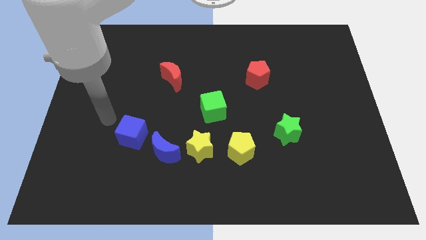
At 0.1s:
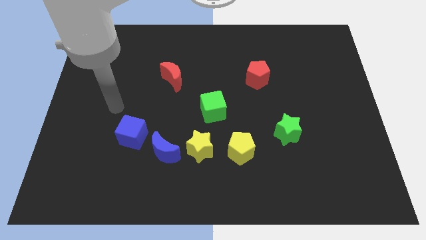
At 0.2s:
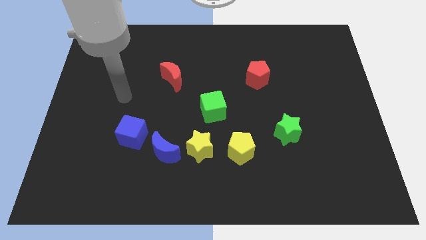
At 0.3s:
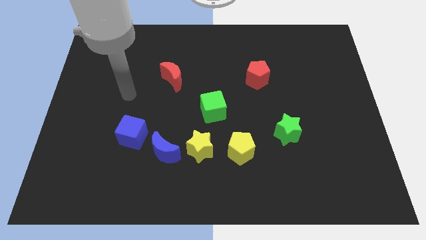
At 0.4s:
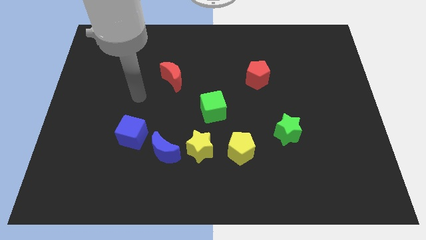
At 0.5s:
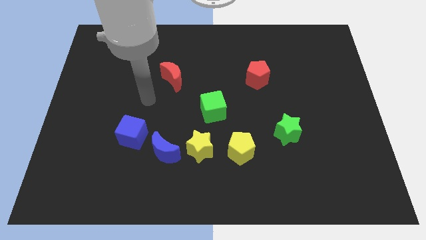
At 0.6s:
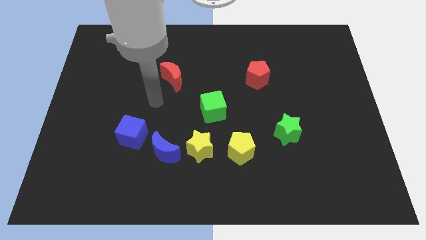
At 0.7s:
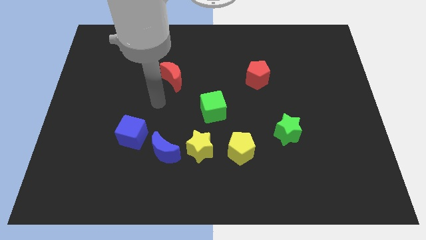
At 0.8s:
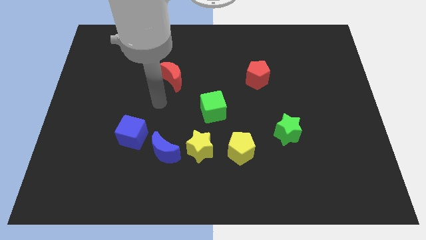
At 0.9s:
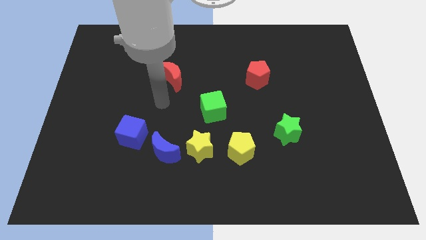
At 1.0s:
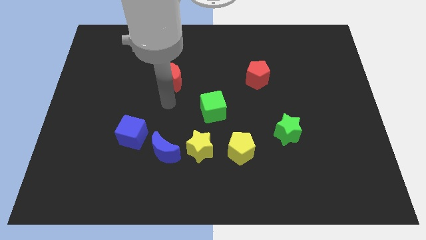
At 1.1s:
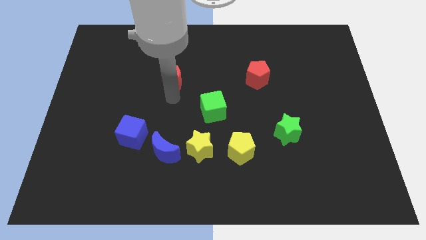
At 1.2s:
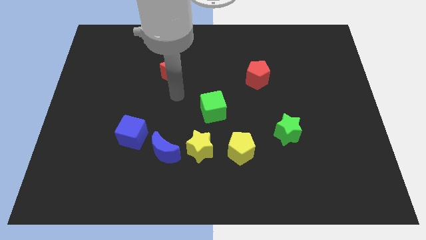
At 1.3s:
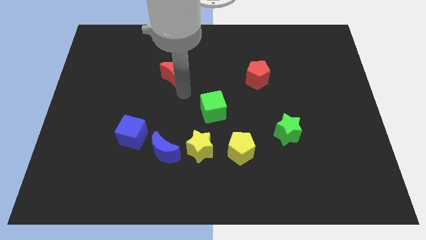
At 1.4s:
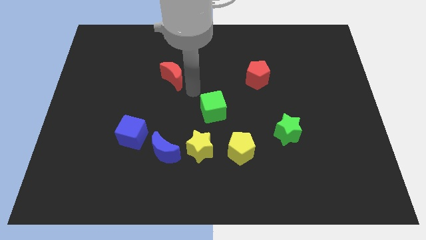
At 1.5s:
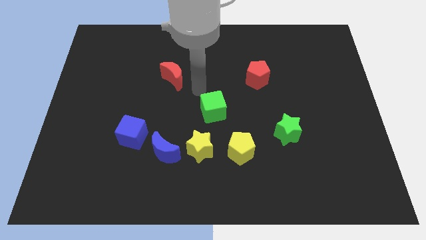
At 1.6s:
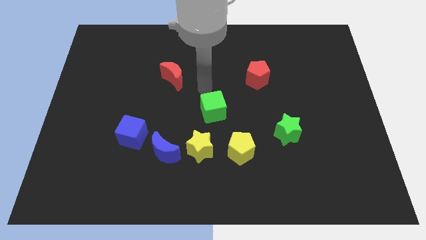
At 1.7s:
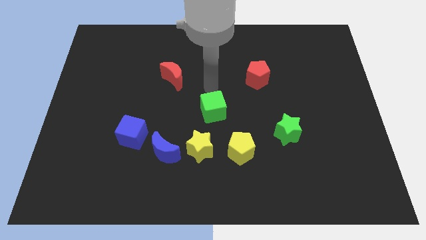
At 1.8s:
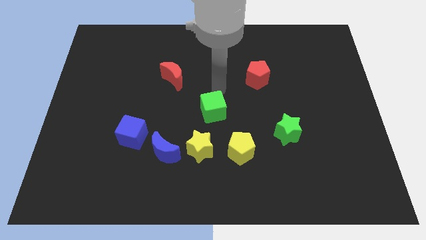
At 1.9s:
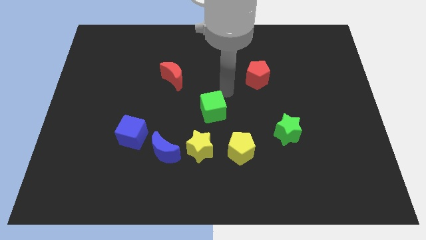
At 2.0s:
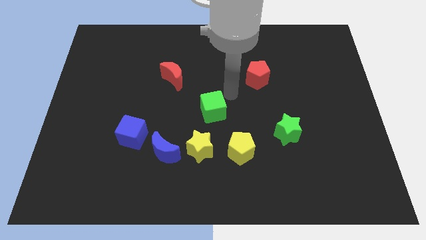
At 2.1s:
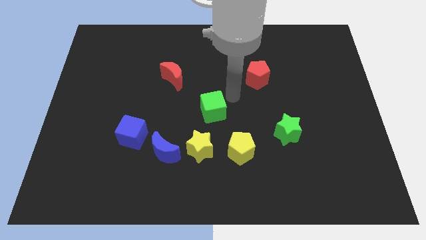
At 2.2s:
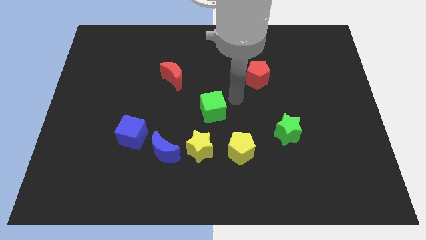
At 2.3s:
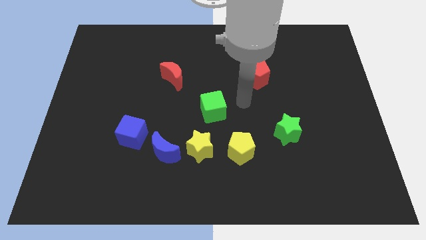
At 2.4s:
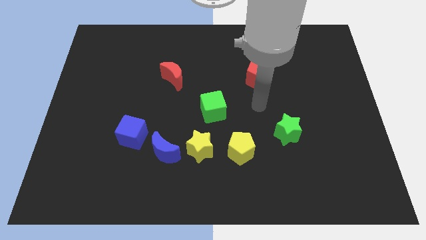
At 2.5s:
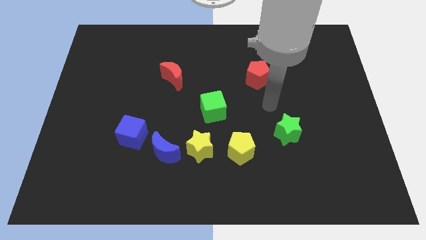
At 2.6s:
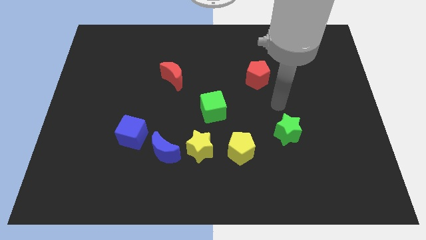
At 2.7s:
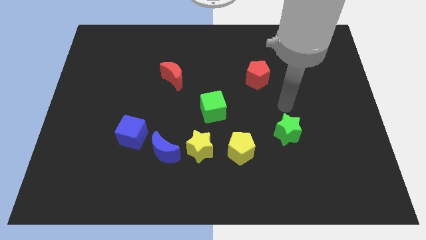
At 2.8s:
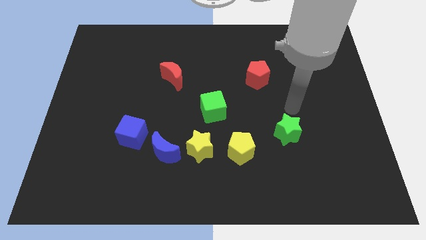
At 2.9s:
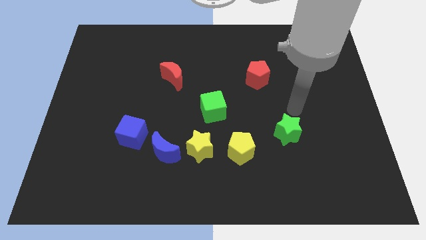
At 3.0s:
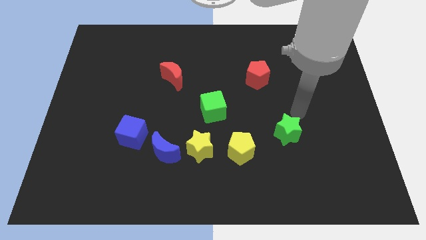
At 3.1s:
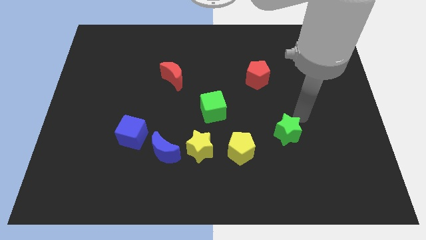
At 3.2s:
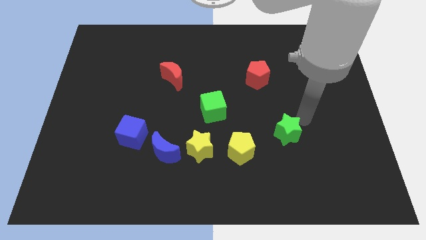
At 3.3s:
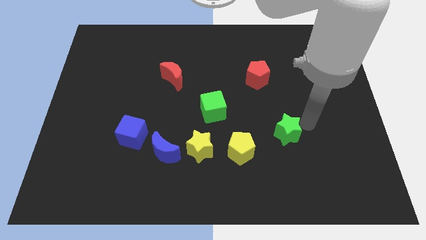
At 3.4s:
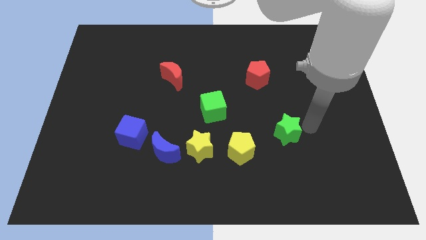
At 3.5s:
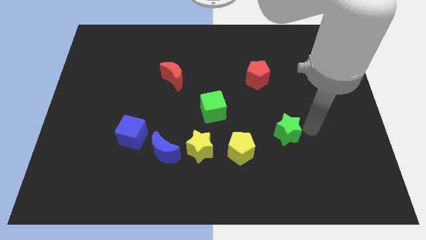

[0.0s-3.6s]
move the arm away from the blue cube

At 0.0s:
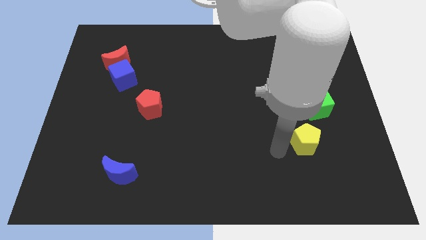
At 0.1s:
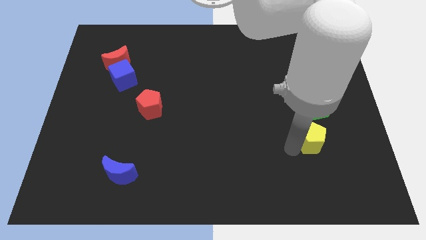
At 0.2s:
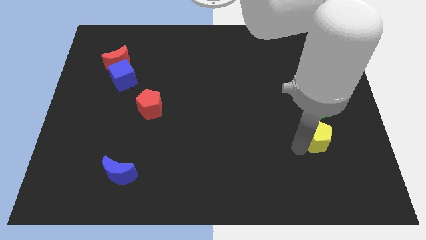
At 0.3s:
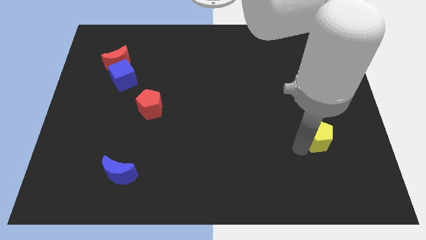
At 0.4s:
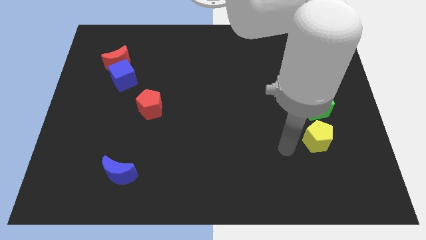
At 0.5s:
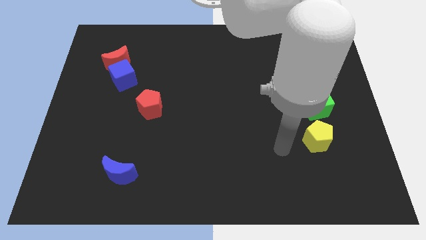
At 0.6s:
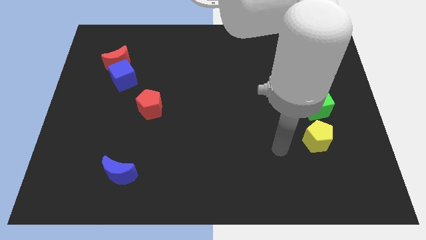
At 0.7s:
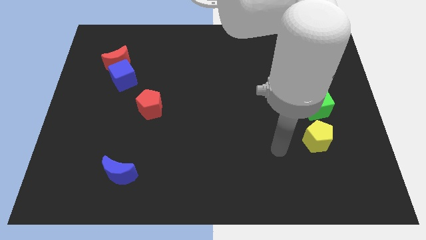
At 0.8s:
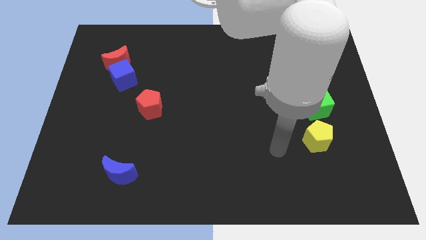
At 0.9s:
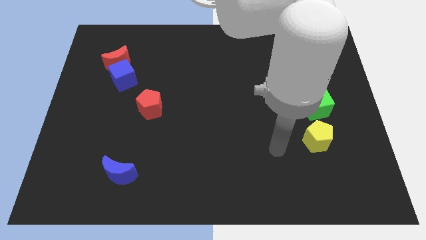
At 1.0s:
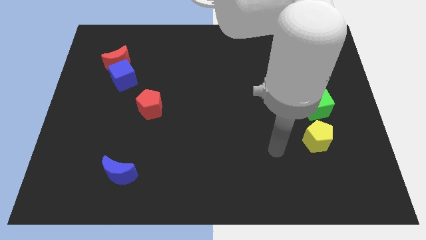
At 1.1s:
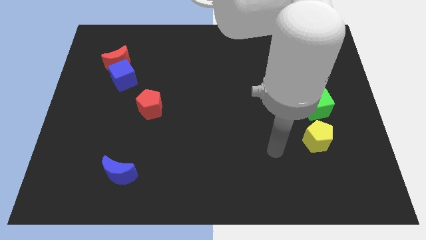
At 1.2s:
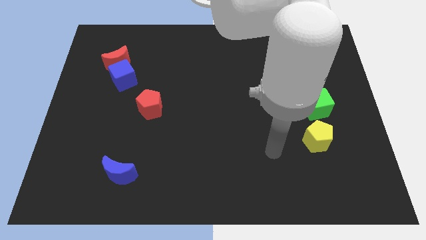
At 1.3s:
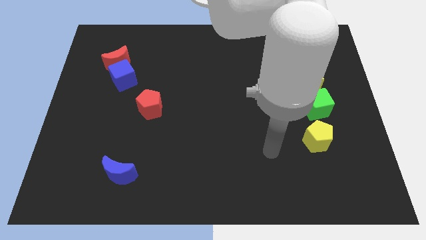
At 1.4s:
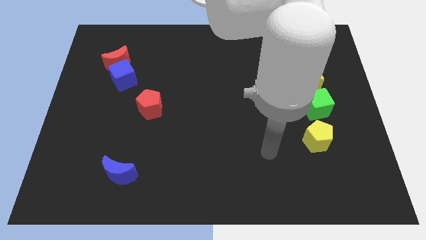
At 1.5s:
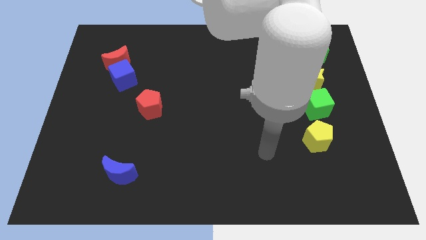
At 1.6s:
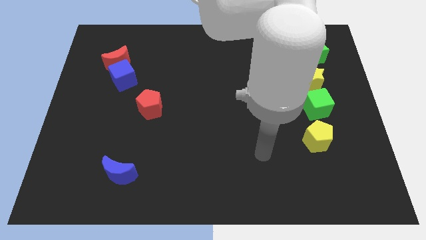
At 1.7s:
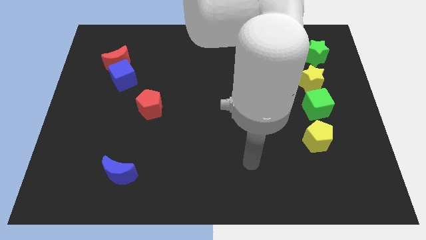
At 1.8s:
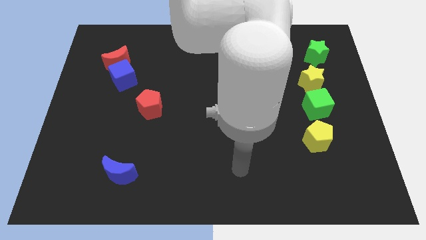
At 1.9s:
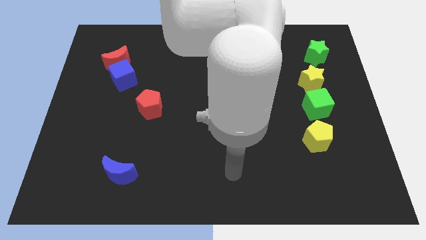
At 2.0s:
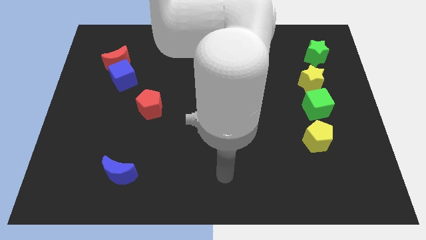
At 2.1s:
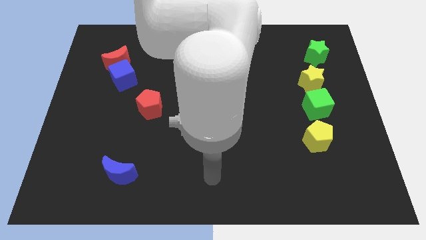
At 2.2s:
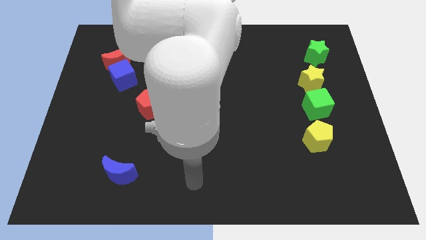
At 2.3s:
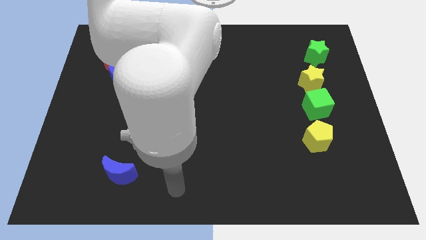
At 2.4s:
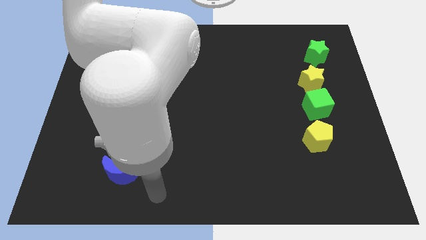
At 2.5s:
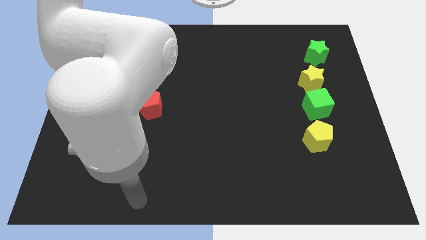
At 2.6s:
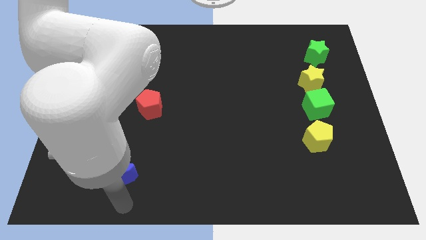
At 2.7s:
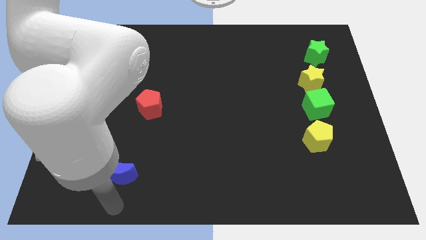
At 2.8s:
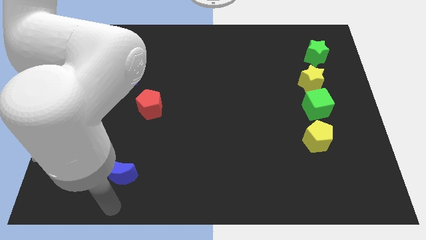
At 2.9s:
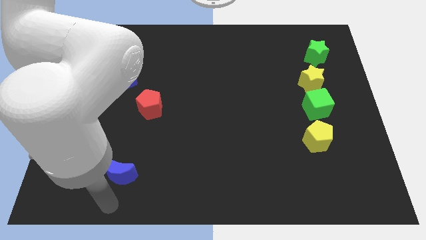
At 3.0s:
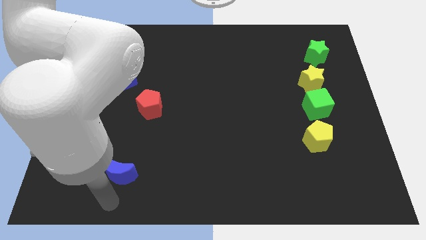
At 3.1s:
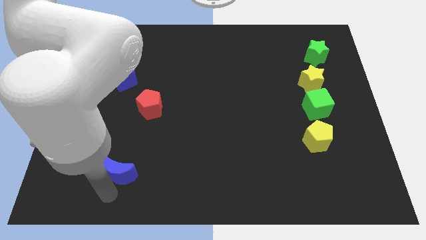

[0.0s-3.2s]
place the arm down to the blue moon

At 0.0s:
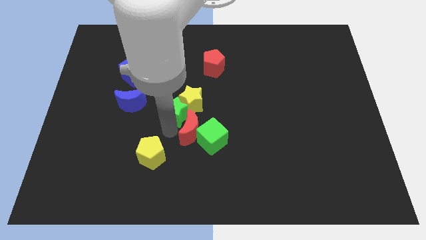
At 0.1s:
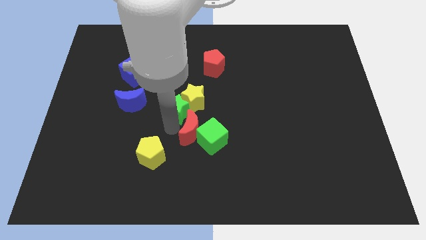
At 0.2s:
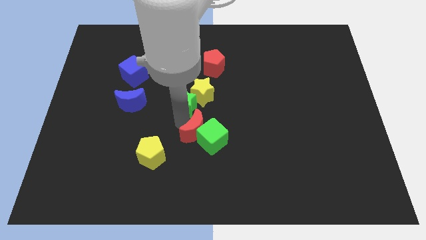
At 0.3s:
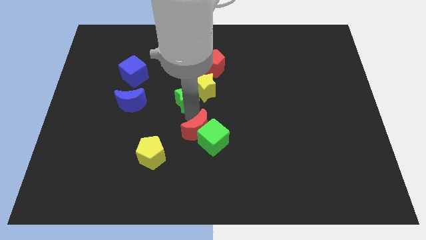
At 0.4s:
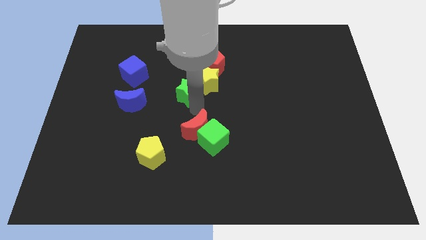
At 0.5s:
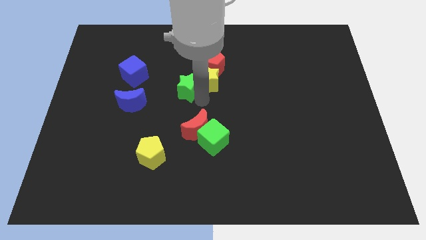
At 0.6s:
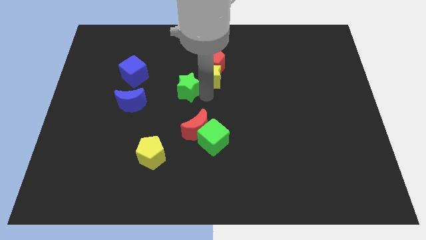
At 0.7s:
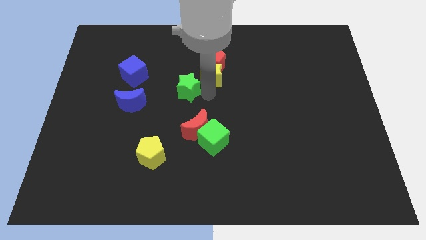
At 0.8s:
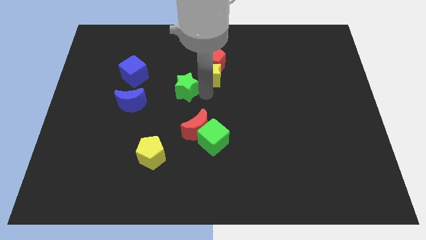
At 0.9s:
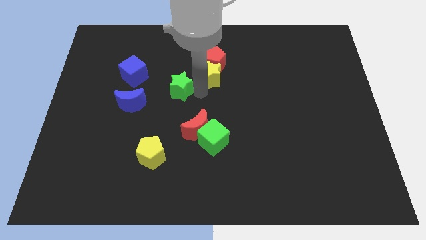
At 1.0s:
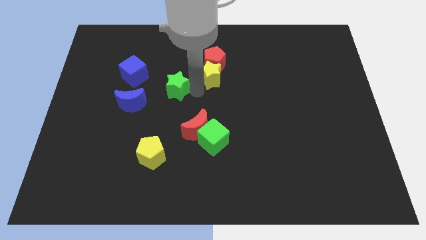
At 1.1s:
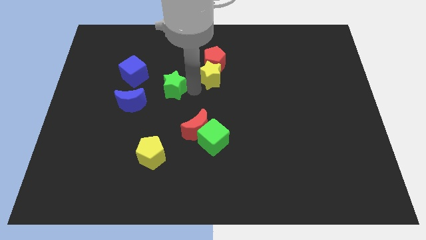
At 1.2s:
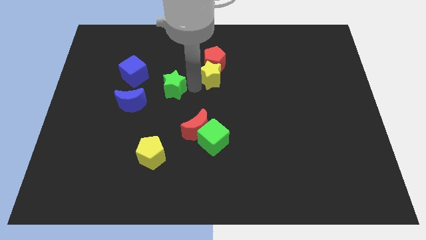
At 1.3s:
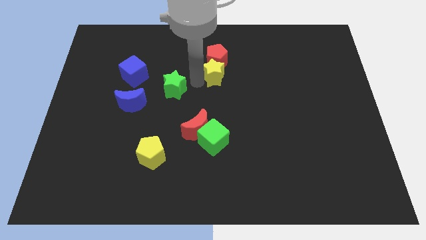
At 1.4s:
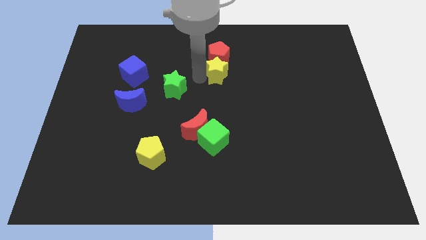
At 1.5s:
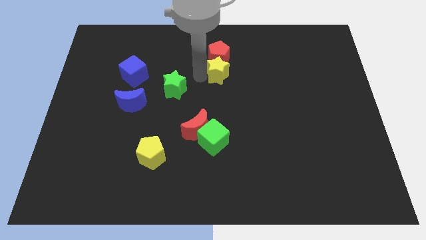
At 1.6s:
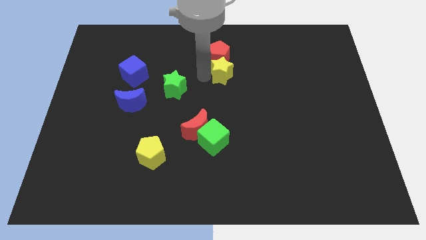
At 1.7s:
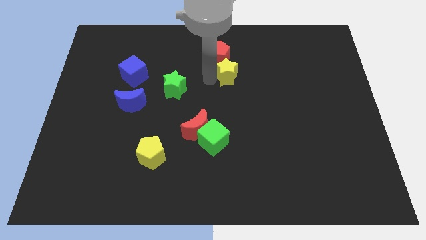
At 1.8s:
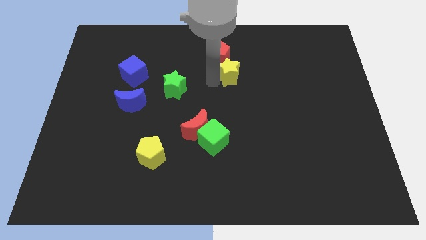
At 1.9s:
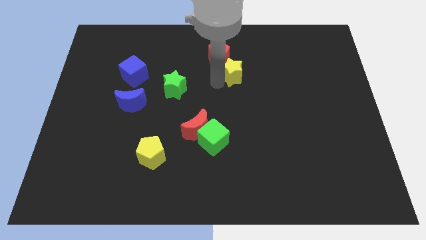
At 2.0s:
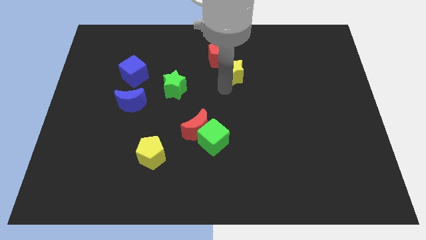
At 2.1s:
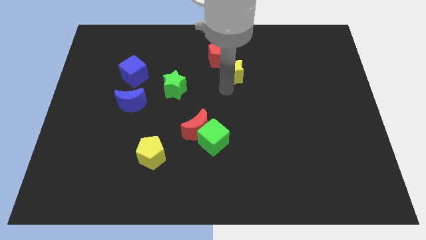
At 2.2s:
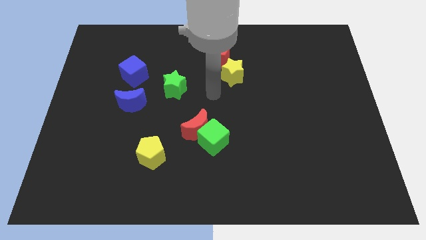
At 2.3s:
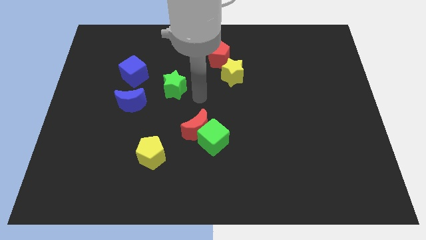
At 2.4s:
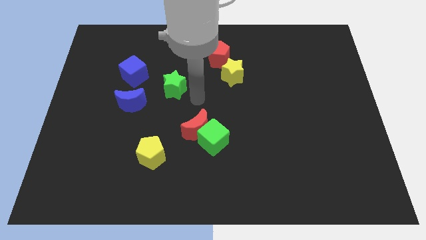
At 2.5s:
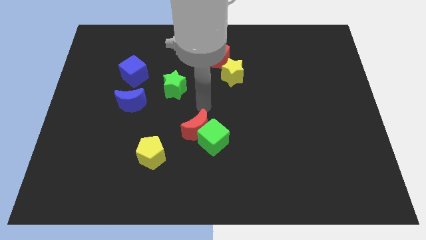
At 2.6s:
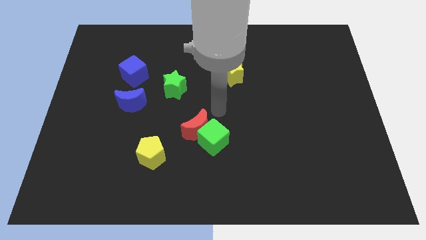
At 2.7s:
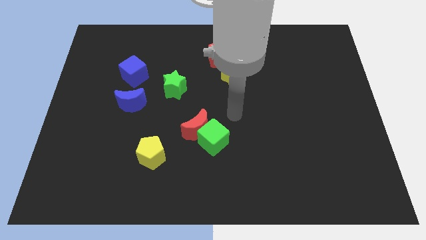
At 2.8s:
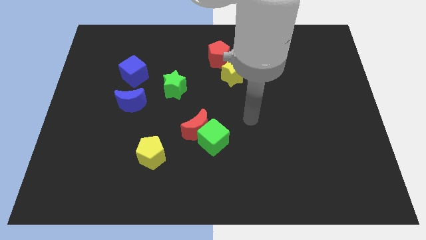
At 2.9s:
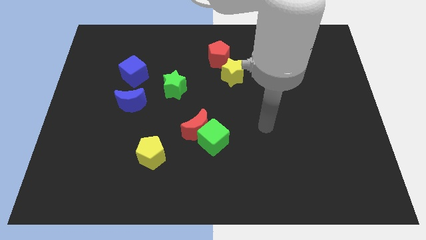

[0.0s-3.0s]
place the yellow star diagonally top right to the red moon
